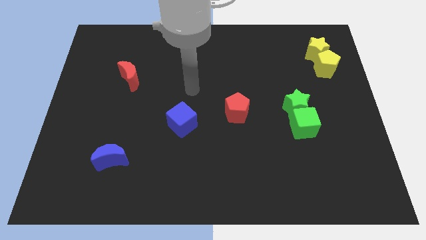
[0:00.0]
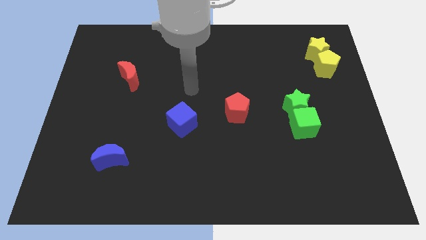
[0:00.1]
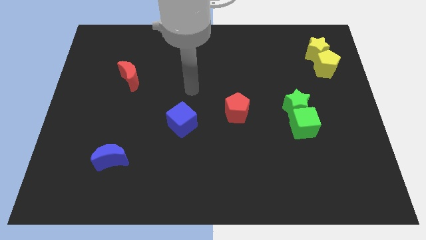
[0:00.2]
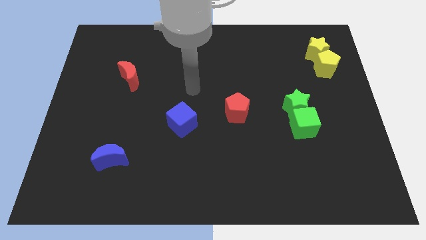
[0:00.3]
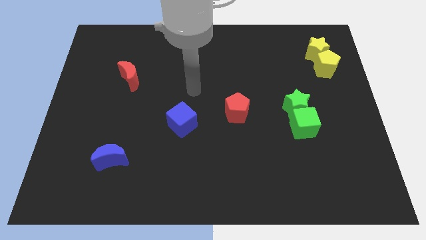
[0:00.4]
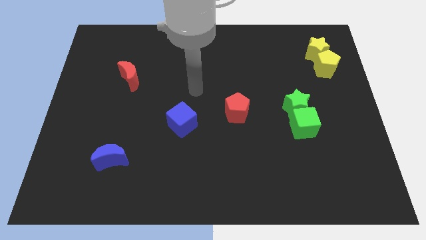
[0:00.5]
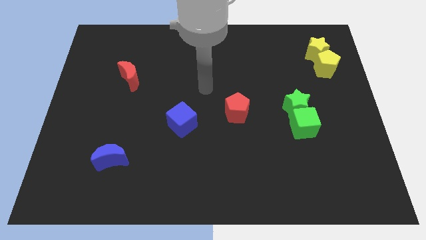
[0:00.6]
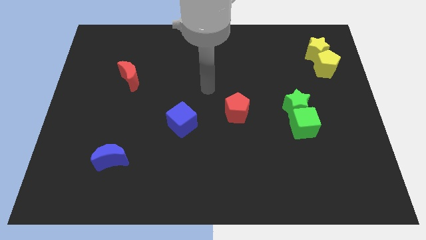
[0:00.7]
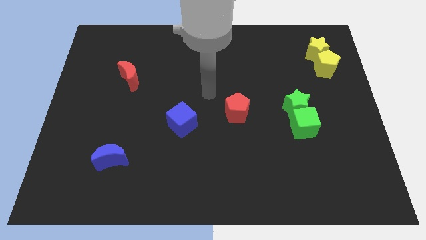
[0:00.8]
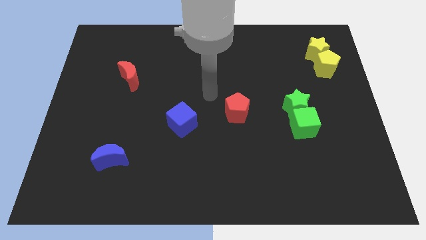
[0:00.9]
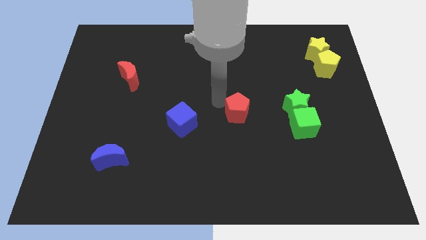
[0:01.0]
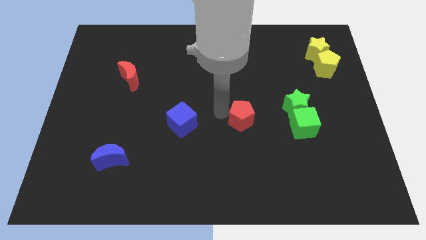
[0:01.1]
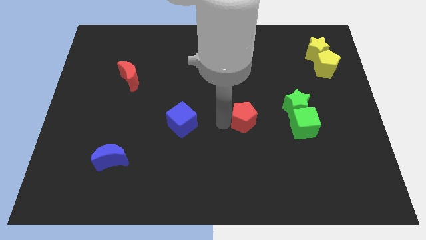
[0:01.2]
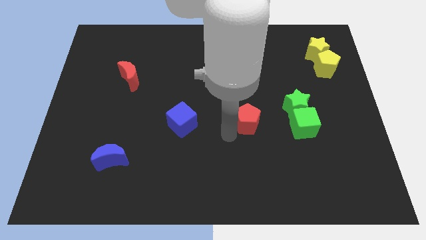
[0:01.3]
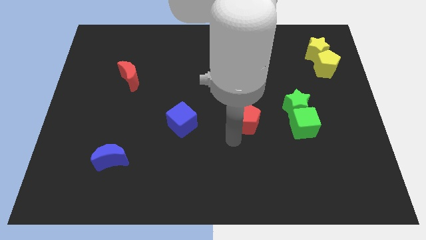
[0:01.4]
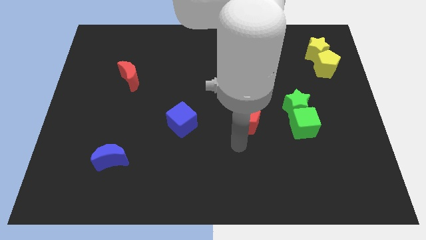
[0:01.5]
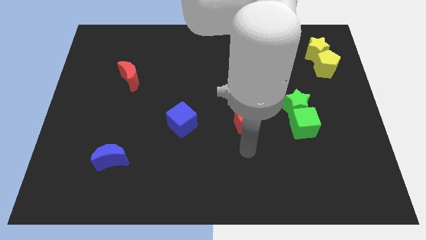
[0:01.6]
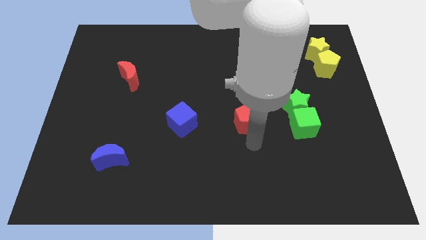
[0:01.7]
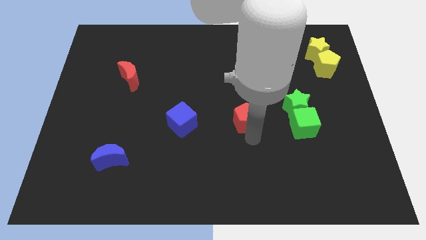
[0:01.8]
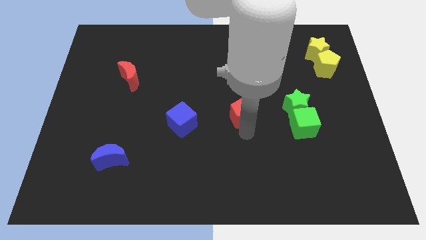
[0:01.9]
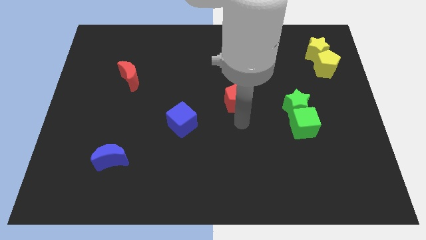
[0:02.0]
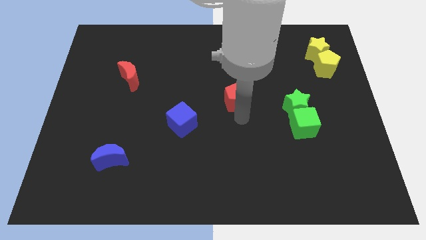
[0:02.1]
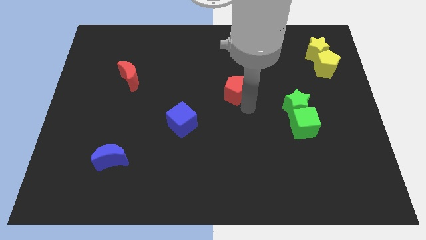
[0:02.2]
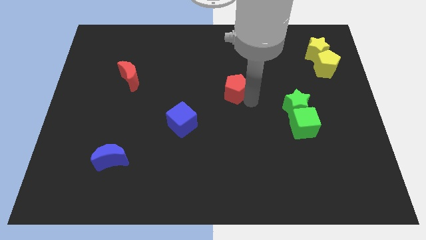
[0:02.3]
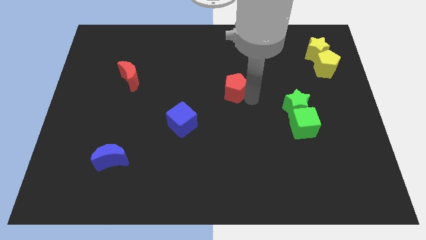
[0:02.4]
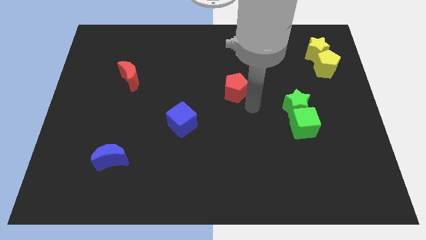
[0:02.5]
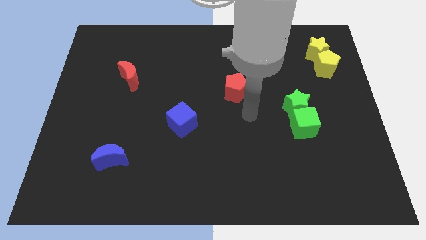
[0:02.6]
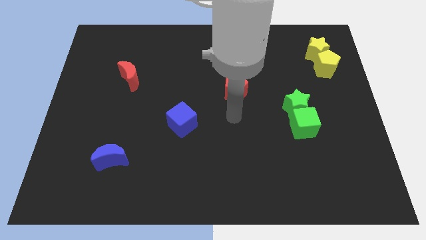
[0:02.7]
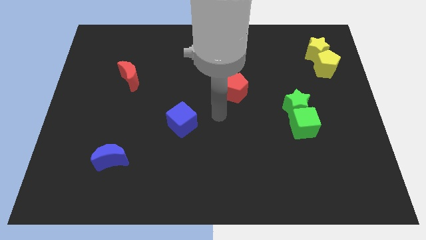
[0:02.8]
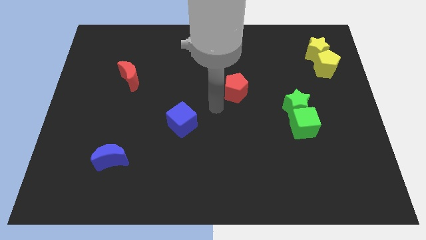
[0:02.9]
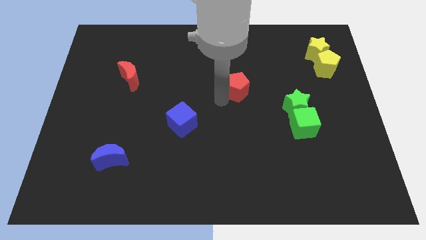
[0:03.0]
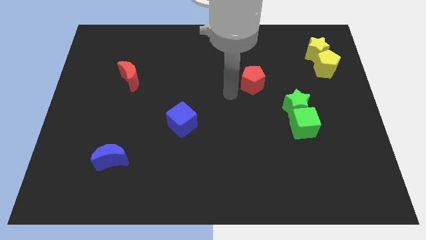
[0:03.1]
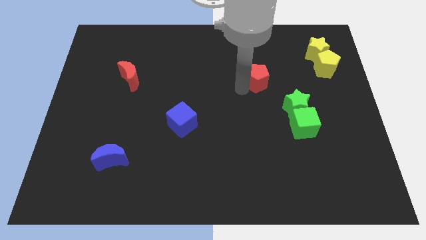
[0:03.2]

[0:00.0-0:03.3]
place the red pentagon diagonal to the green star

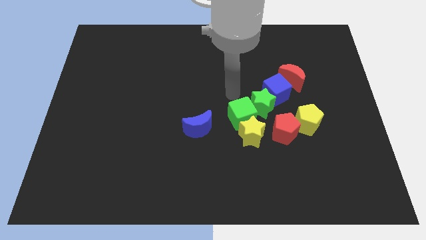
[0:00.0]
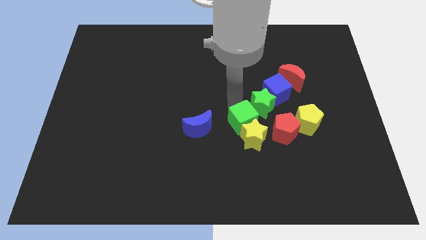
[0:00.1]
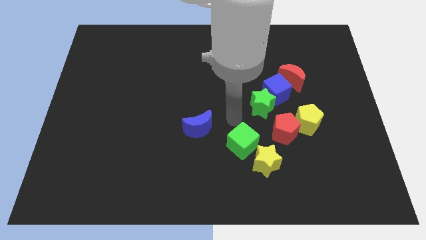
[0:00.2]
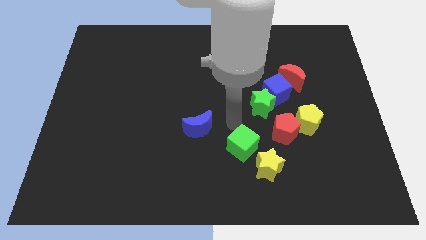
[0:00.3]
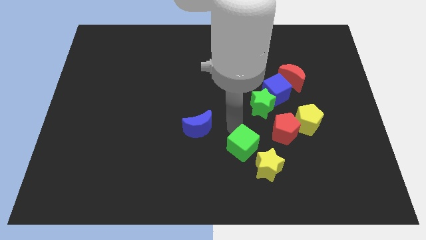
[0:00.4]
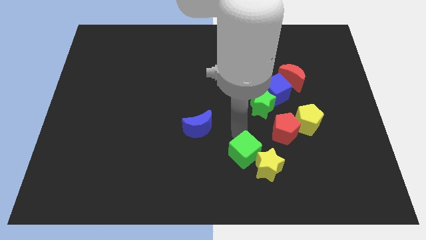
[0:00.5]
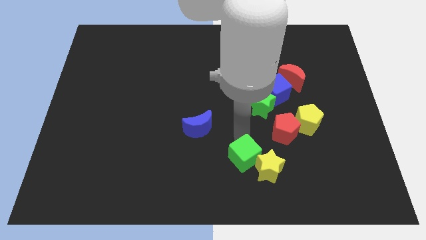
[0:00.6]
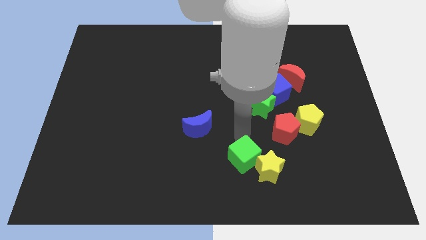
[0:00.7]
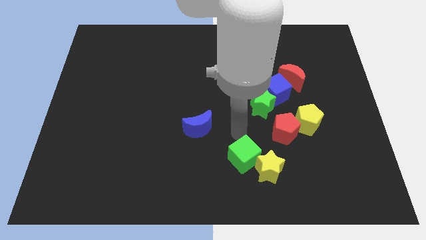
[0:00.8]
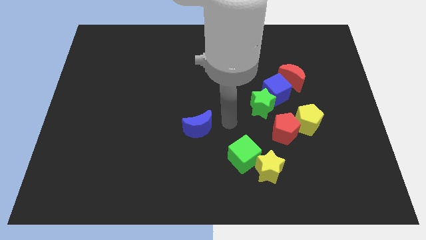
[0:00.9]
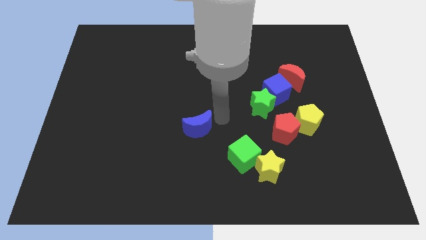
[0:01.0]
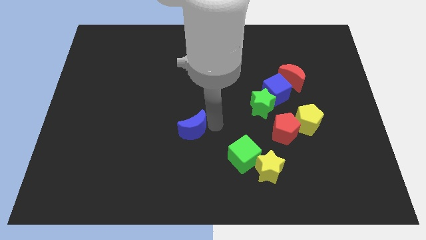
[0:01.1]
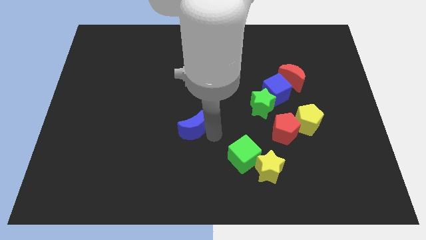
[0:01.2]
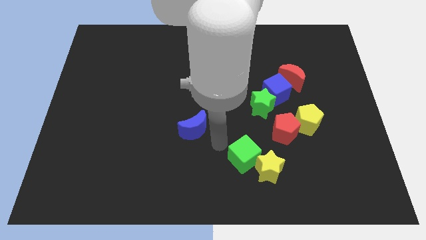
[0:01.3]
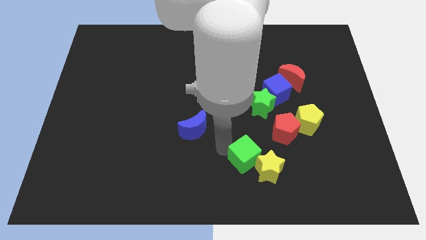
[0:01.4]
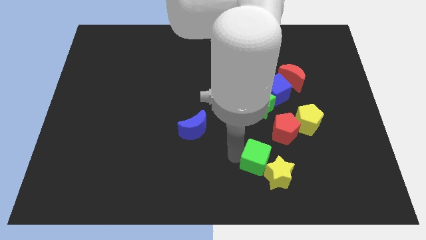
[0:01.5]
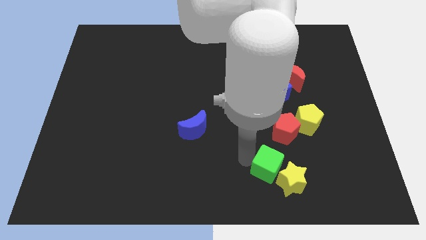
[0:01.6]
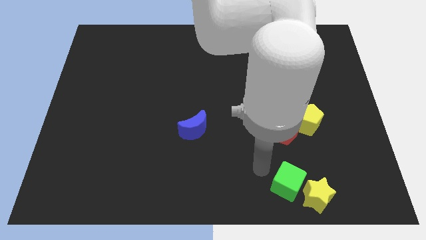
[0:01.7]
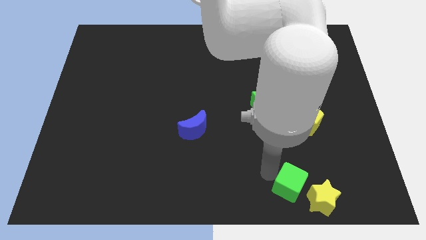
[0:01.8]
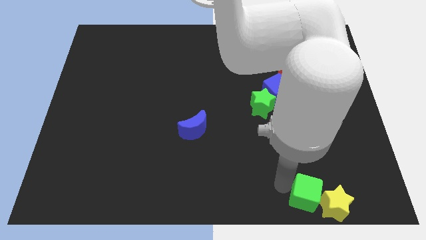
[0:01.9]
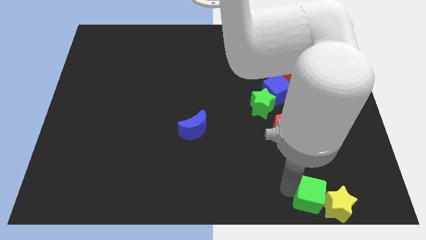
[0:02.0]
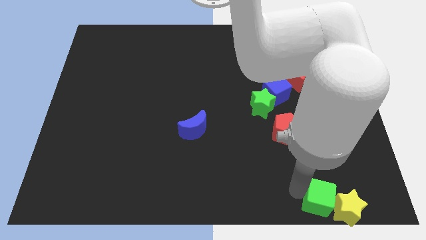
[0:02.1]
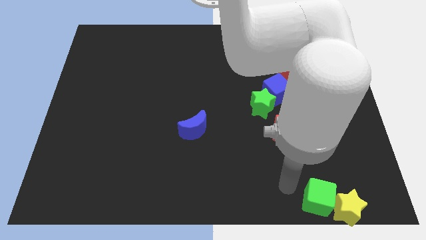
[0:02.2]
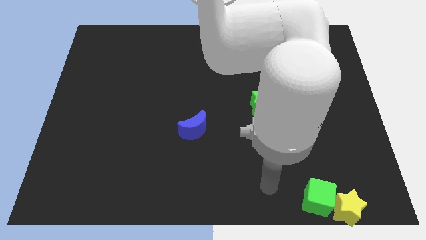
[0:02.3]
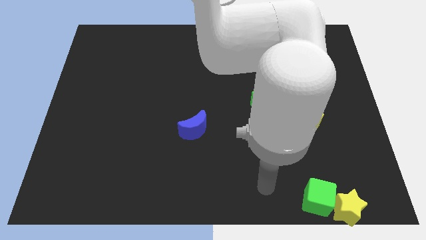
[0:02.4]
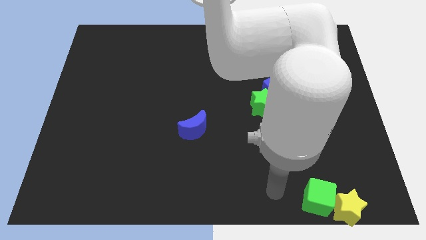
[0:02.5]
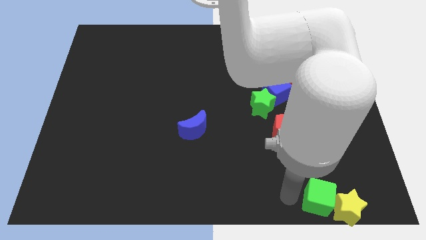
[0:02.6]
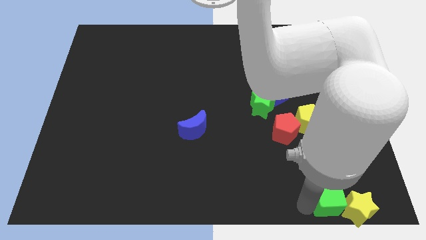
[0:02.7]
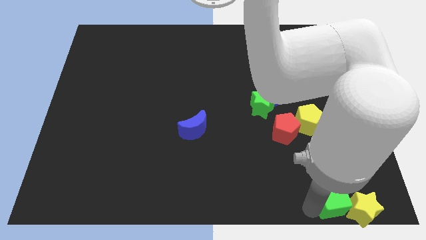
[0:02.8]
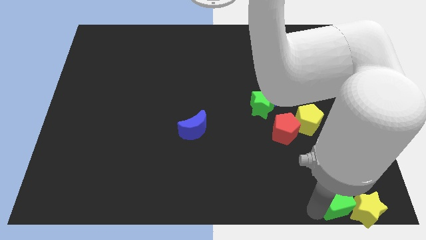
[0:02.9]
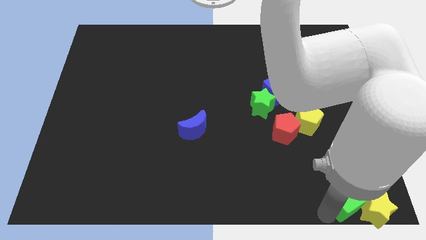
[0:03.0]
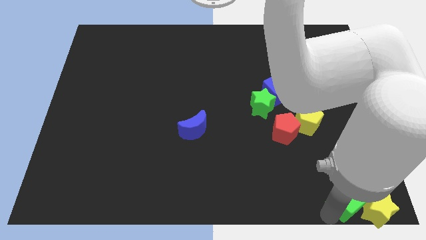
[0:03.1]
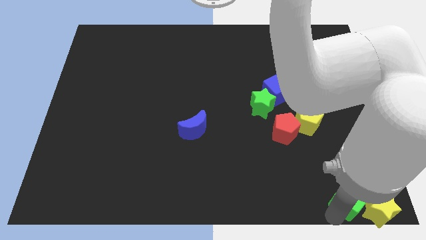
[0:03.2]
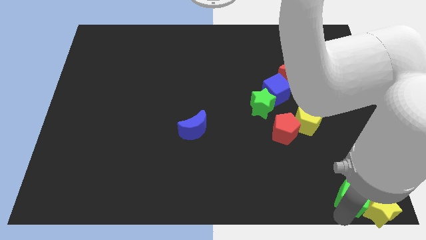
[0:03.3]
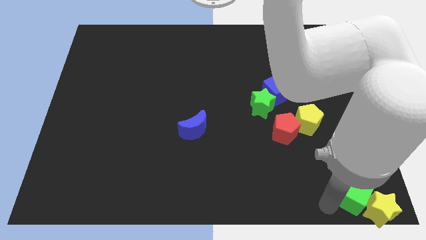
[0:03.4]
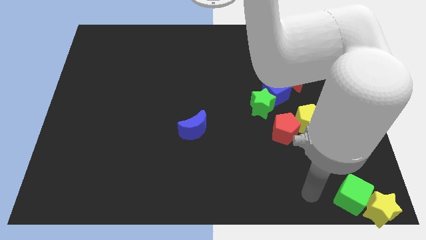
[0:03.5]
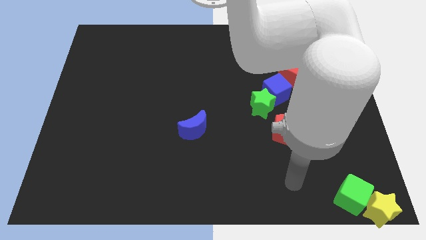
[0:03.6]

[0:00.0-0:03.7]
move the yellow star and green cube towards the bottom right corner of the board

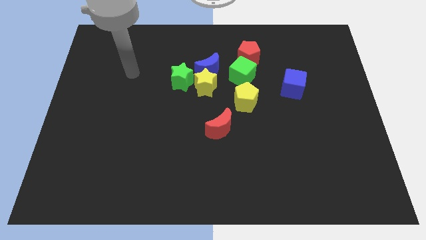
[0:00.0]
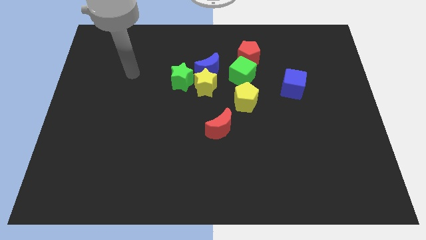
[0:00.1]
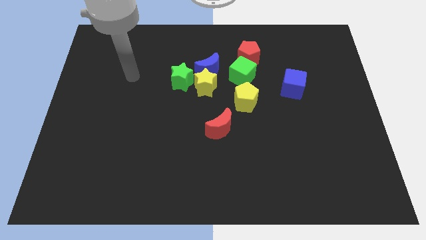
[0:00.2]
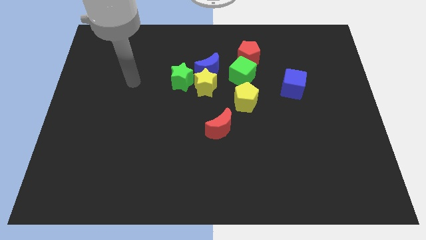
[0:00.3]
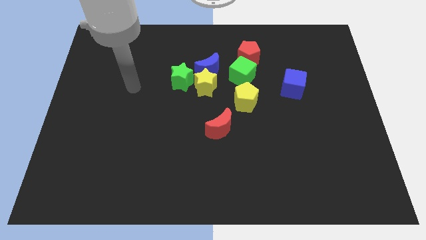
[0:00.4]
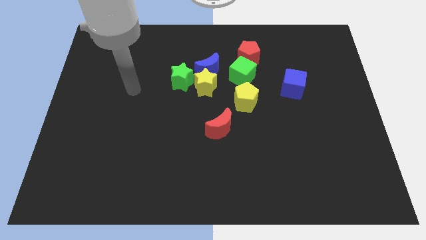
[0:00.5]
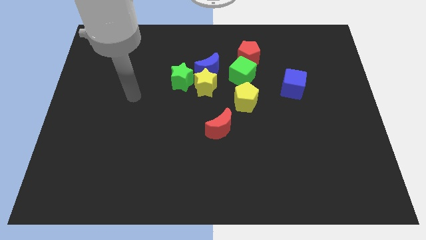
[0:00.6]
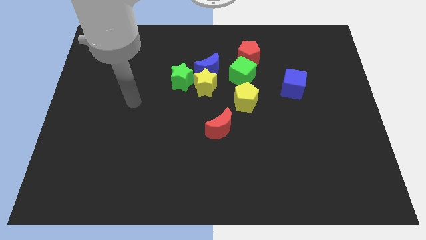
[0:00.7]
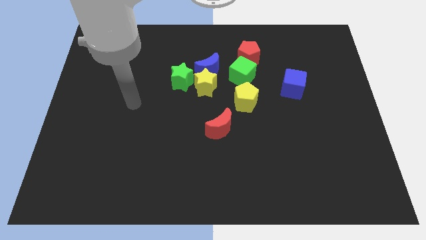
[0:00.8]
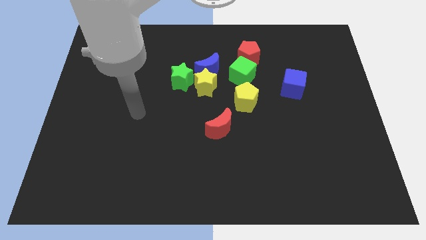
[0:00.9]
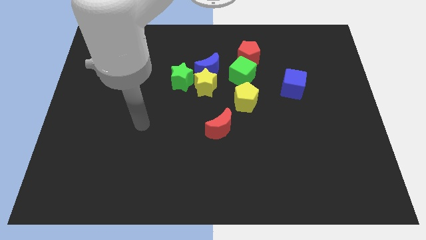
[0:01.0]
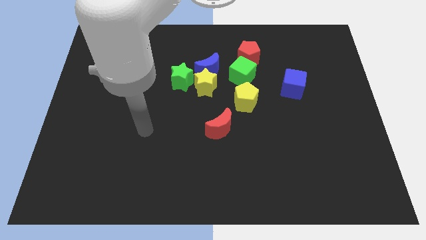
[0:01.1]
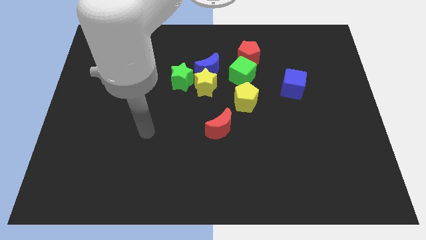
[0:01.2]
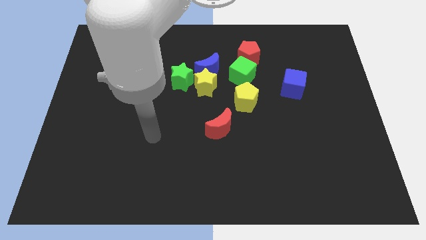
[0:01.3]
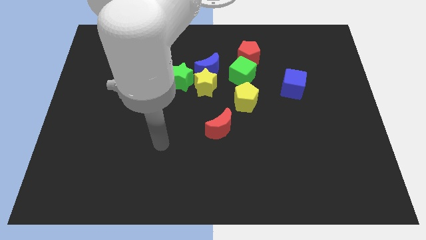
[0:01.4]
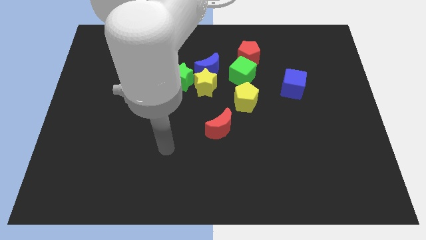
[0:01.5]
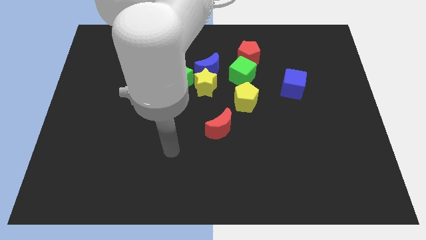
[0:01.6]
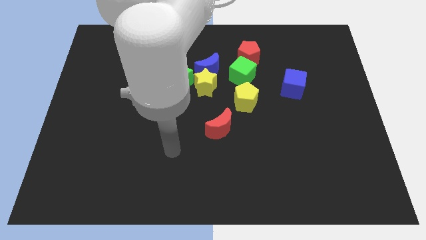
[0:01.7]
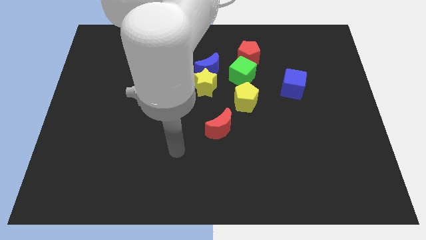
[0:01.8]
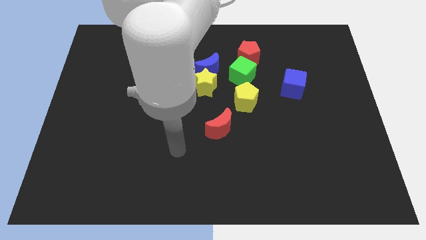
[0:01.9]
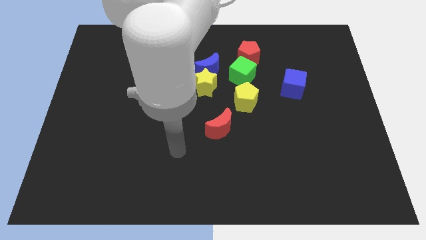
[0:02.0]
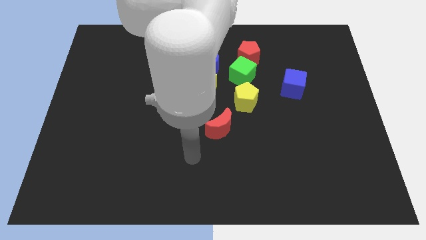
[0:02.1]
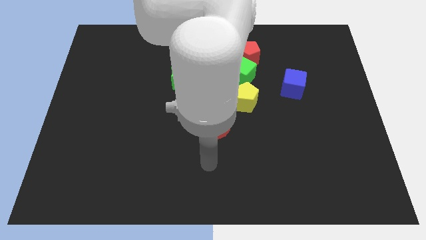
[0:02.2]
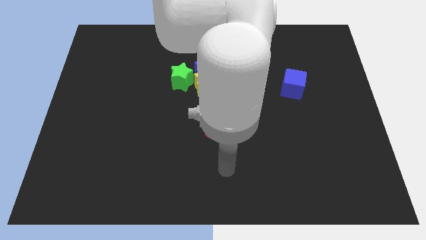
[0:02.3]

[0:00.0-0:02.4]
place your arm to the bottom of red moon
